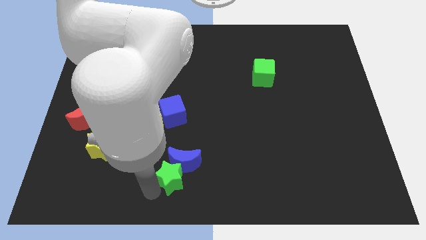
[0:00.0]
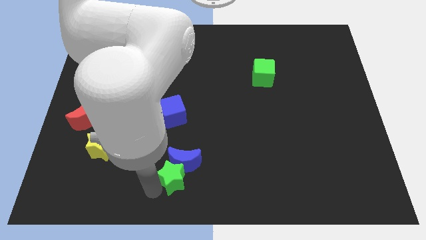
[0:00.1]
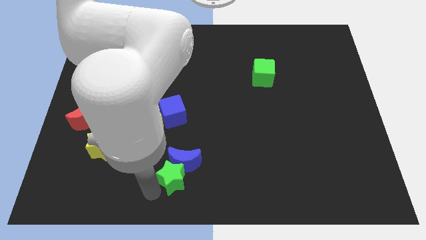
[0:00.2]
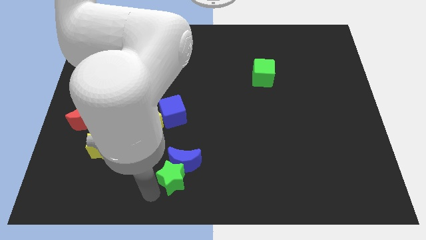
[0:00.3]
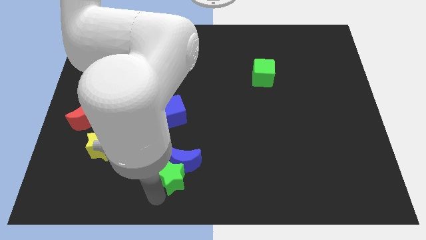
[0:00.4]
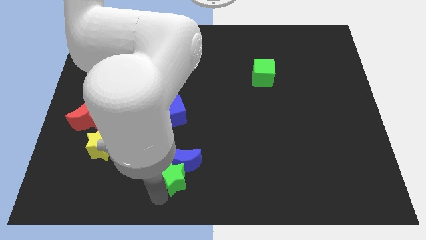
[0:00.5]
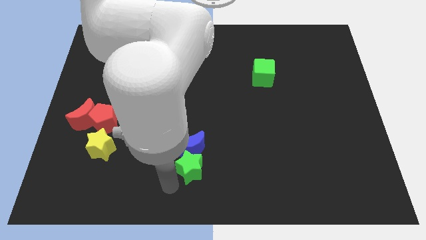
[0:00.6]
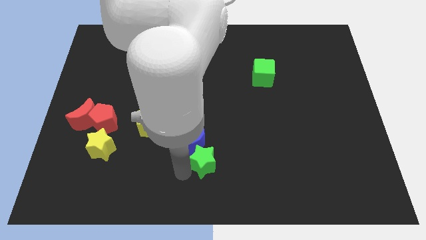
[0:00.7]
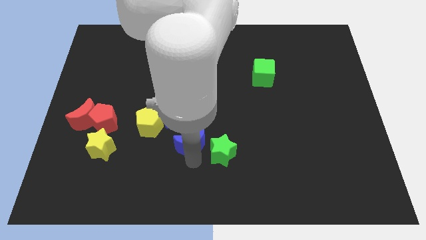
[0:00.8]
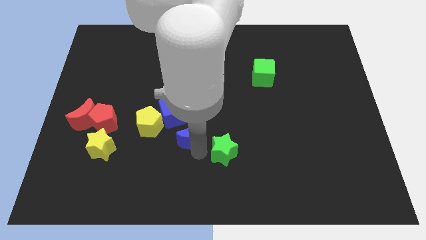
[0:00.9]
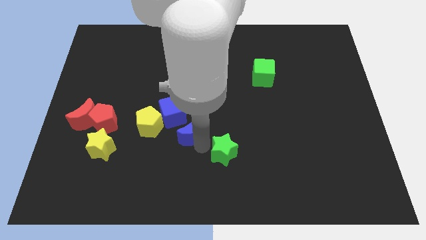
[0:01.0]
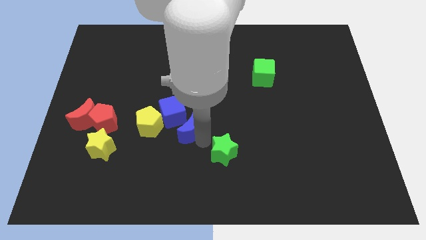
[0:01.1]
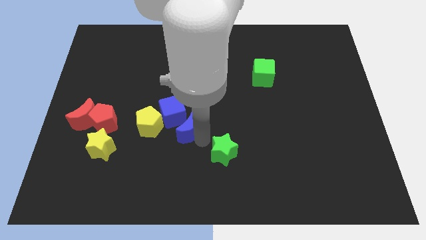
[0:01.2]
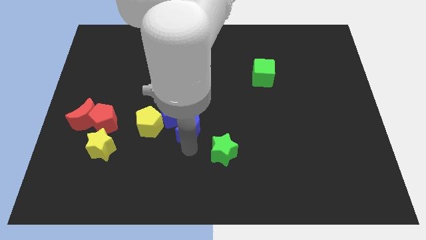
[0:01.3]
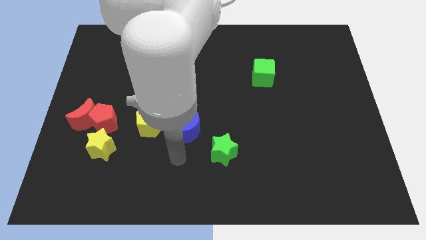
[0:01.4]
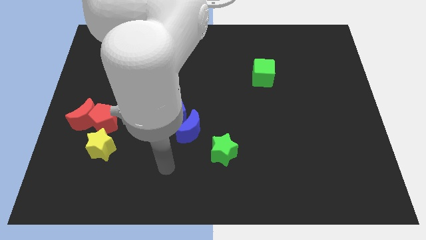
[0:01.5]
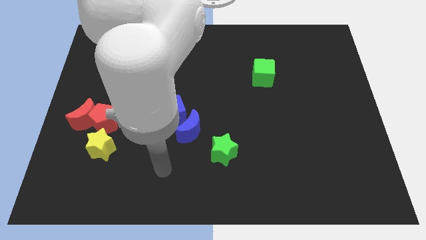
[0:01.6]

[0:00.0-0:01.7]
separate the blue moon and the green star

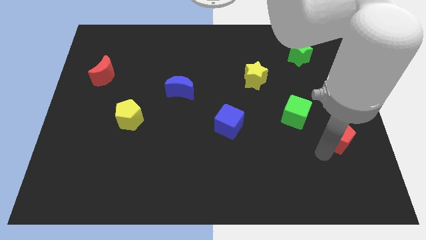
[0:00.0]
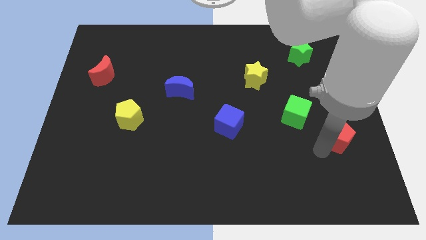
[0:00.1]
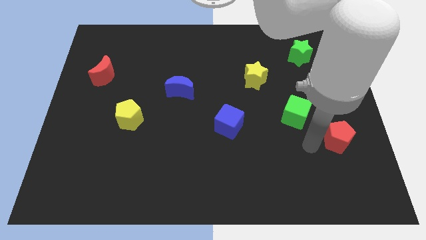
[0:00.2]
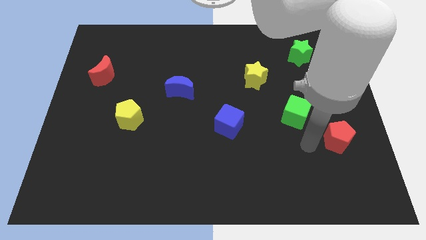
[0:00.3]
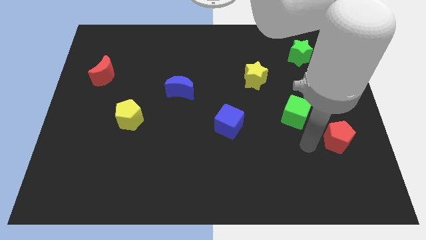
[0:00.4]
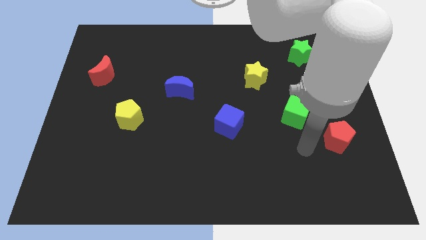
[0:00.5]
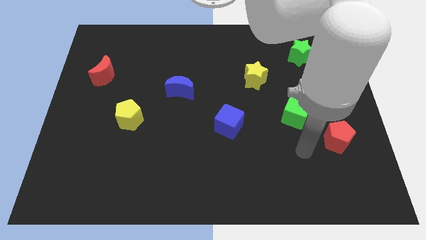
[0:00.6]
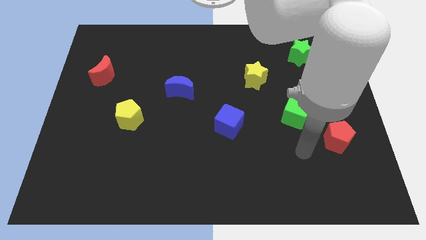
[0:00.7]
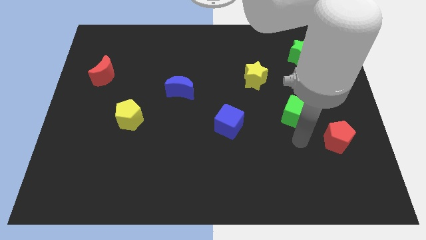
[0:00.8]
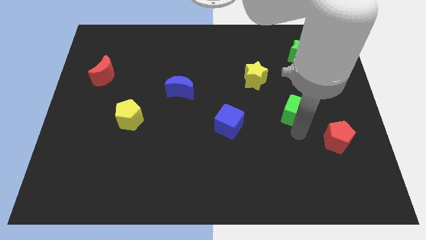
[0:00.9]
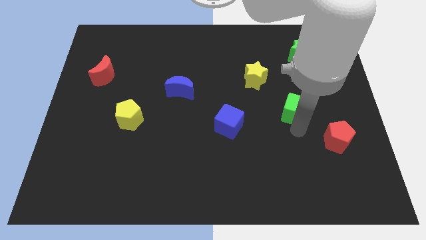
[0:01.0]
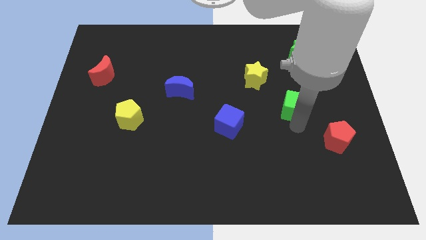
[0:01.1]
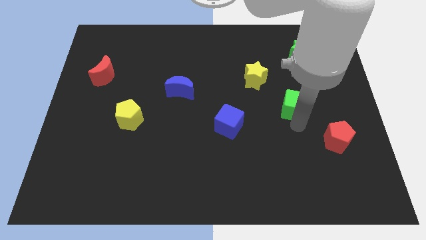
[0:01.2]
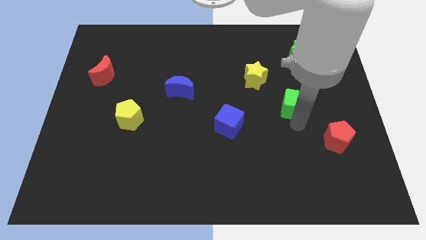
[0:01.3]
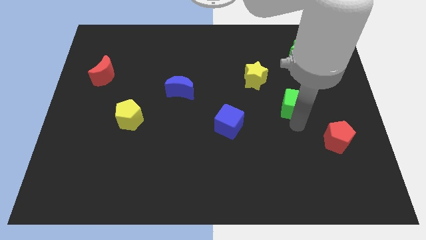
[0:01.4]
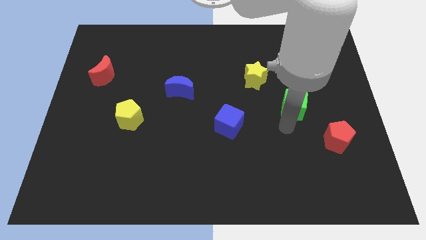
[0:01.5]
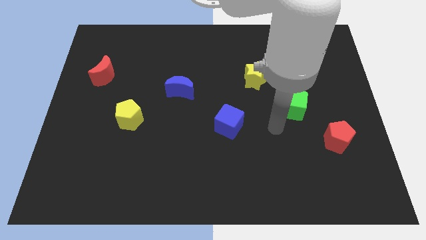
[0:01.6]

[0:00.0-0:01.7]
slightly push the green cube upward

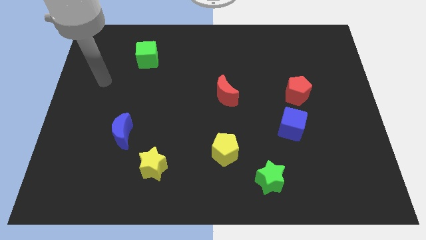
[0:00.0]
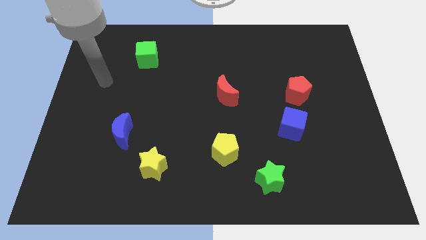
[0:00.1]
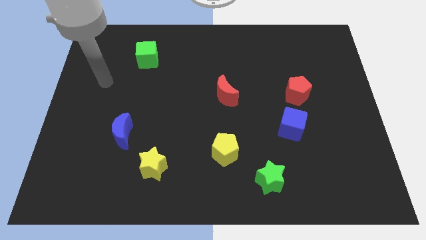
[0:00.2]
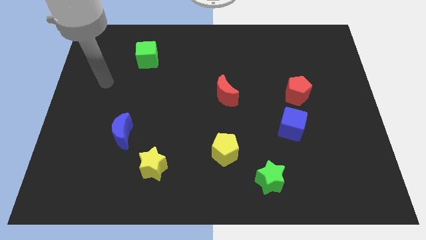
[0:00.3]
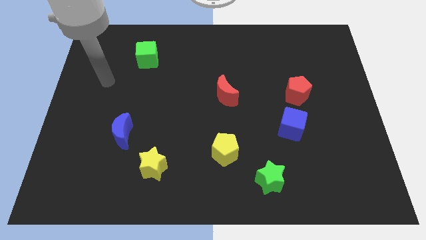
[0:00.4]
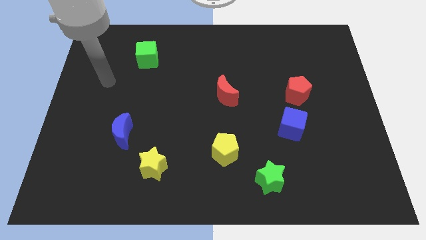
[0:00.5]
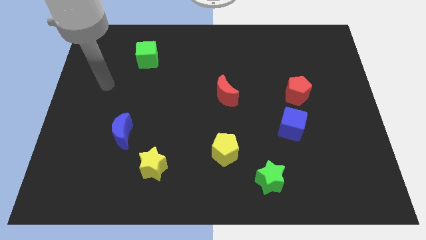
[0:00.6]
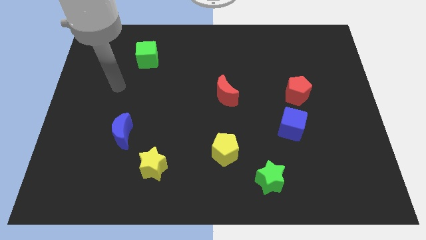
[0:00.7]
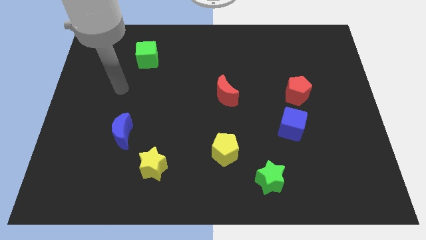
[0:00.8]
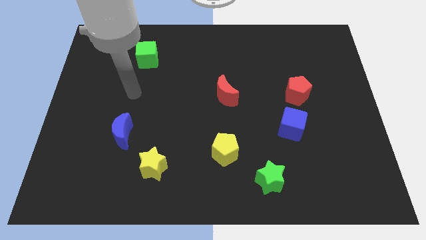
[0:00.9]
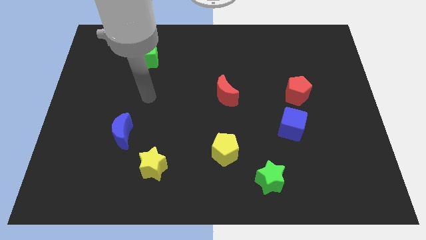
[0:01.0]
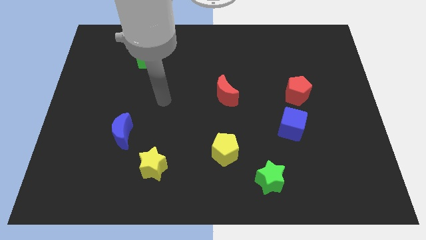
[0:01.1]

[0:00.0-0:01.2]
place your hand vertically below the green cube

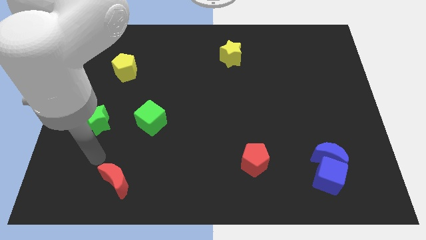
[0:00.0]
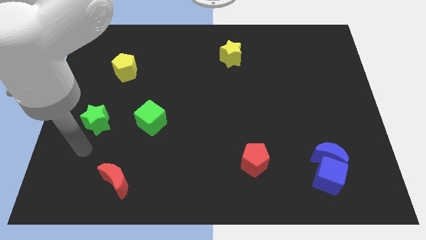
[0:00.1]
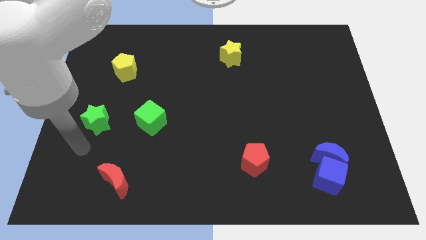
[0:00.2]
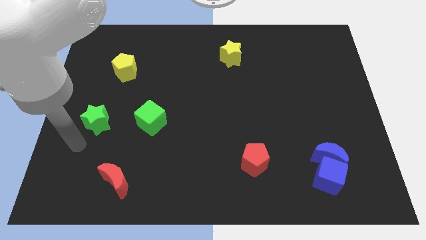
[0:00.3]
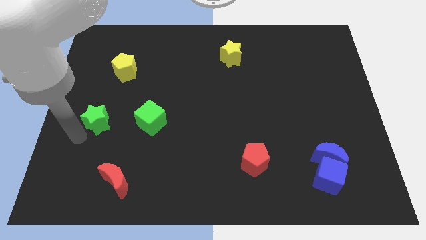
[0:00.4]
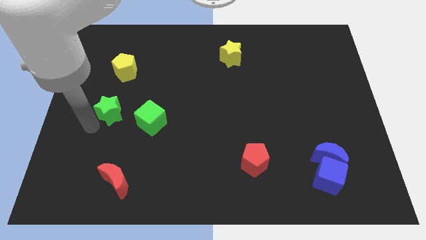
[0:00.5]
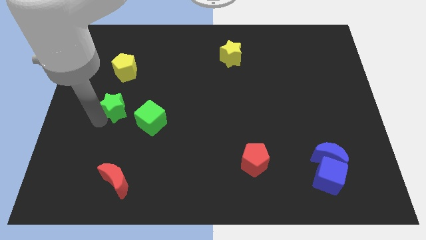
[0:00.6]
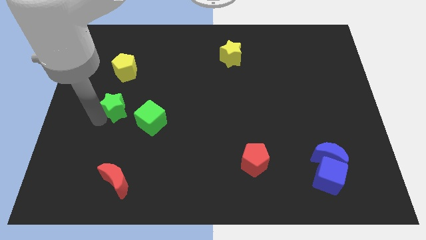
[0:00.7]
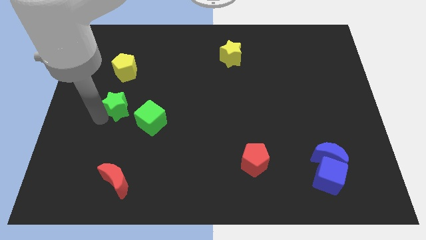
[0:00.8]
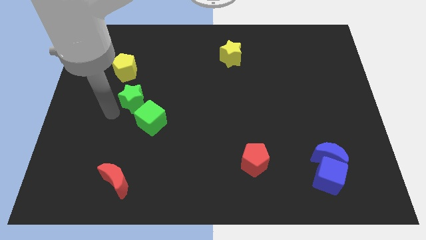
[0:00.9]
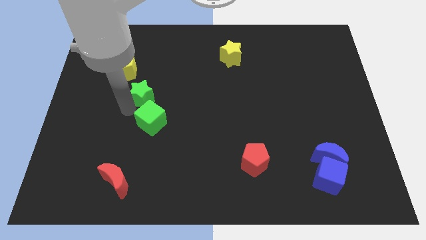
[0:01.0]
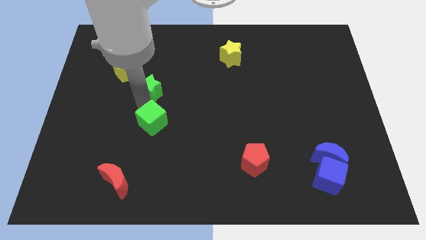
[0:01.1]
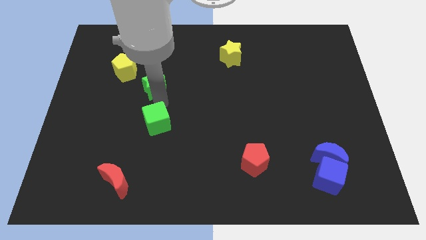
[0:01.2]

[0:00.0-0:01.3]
put the green star above the green cube

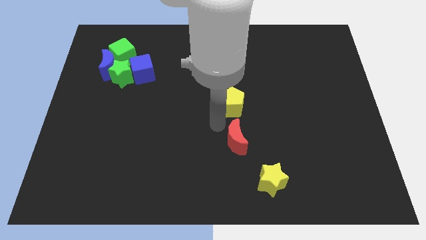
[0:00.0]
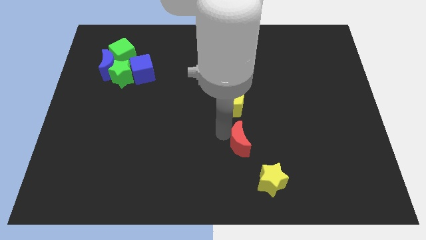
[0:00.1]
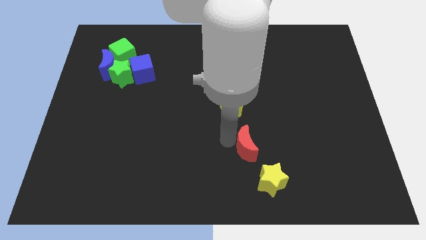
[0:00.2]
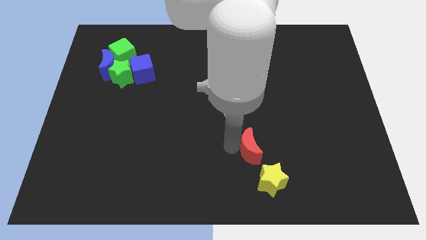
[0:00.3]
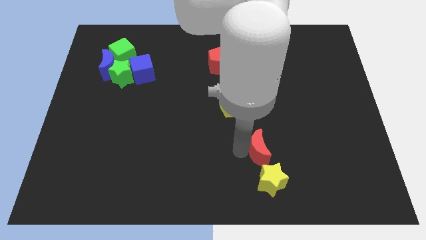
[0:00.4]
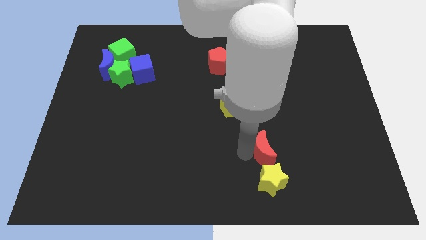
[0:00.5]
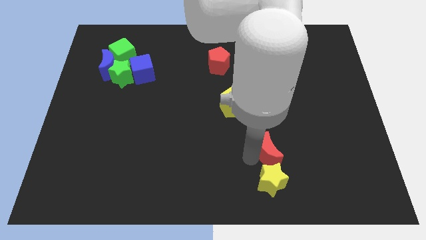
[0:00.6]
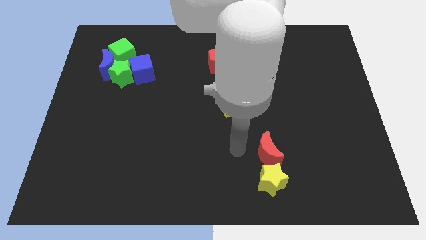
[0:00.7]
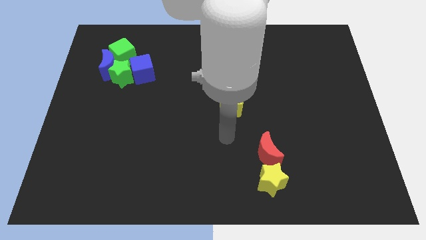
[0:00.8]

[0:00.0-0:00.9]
place red crescent above yellow star

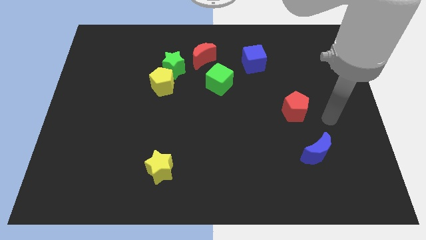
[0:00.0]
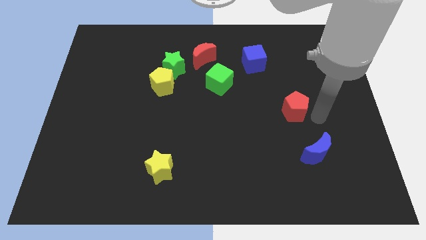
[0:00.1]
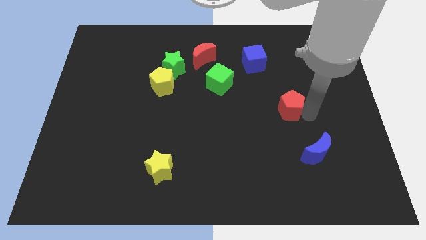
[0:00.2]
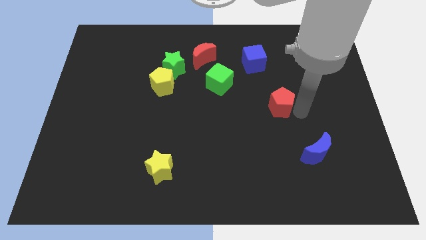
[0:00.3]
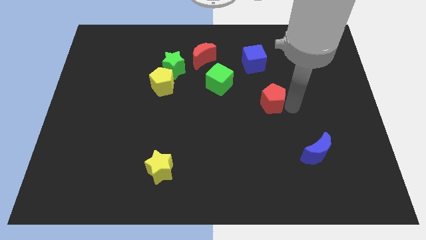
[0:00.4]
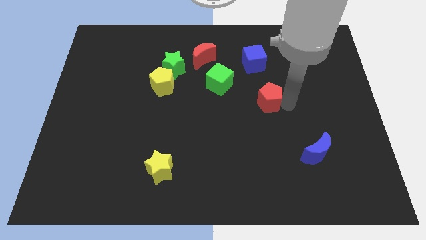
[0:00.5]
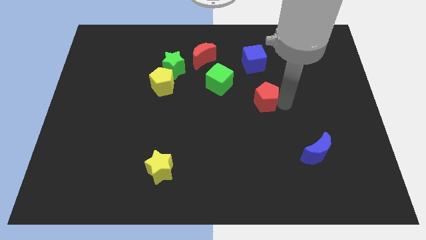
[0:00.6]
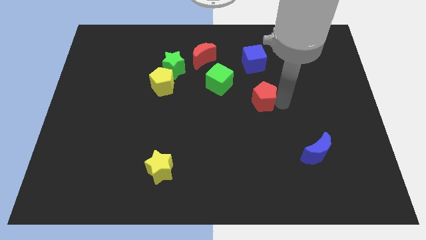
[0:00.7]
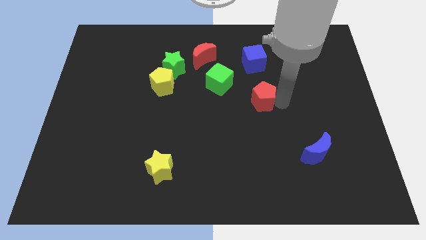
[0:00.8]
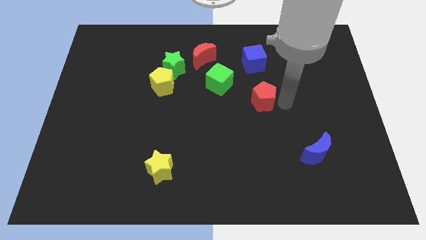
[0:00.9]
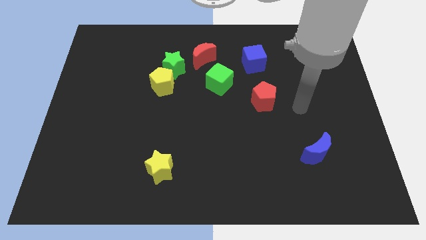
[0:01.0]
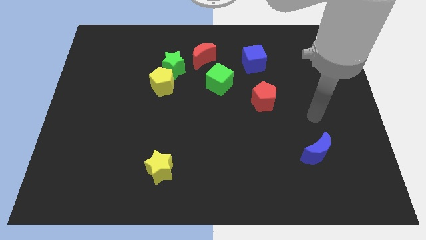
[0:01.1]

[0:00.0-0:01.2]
push the red pentagon to the bottom right side of the green cube

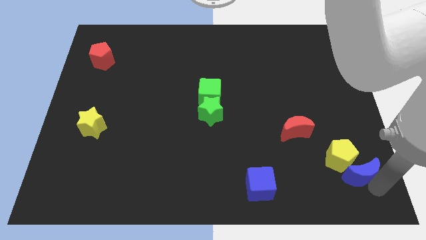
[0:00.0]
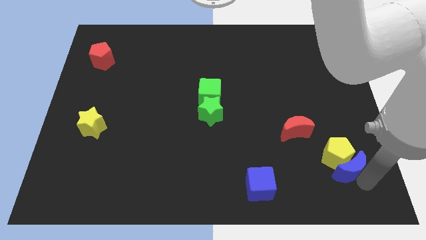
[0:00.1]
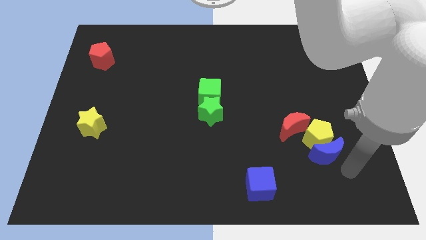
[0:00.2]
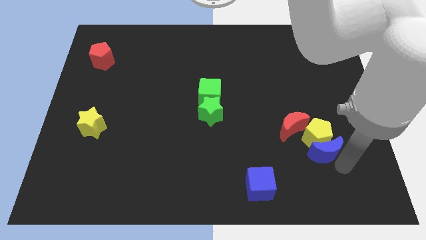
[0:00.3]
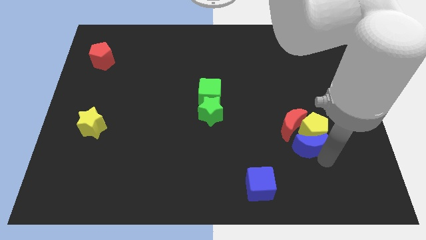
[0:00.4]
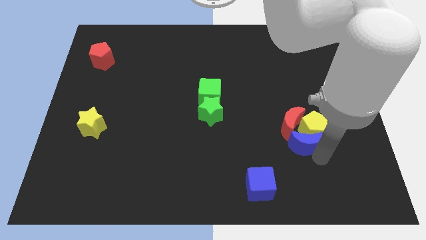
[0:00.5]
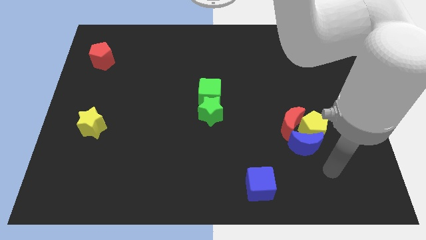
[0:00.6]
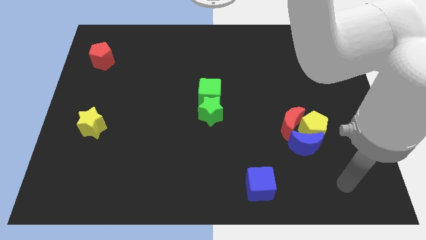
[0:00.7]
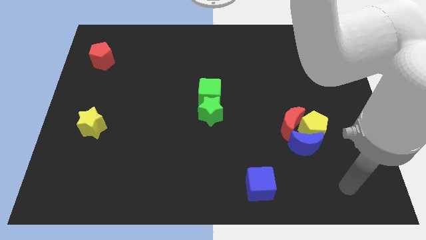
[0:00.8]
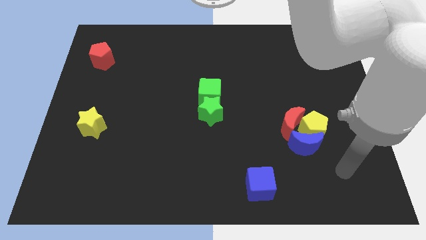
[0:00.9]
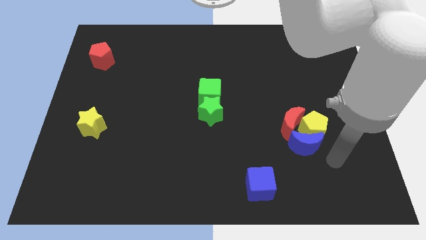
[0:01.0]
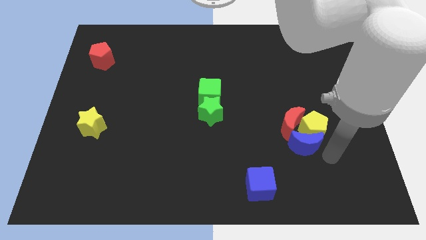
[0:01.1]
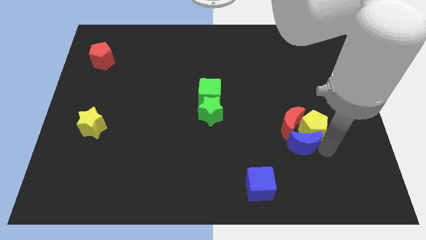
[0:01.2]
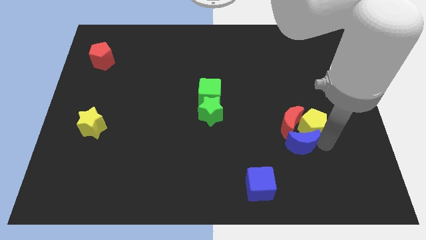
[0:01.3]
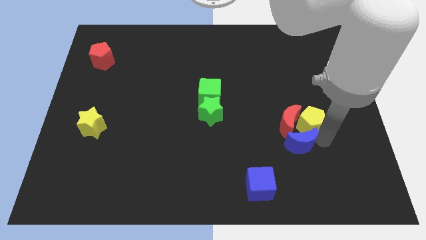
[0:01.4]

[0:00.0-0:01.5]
push the blue crescent into the group of red crescent and yellow pentagon slightly upwards
